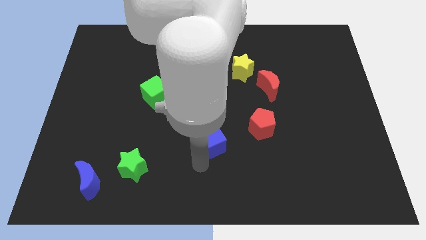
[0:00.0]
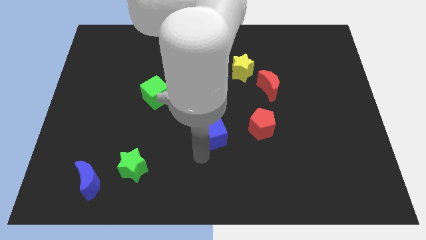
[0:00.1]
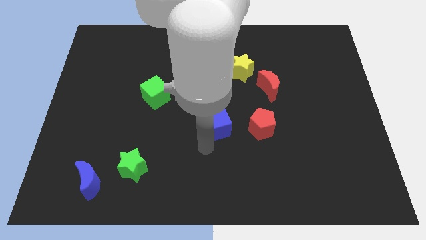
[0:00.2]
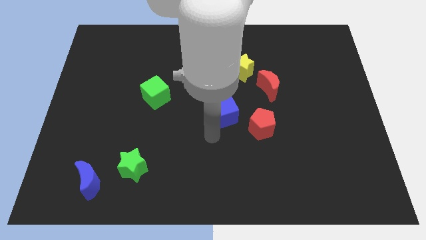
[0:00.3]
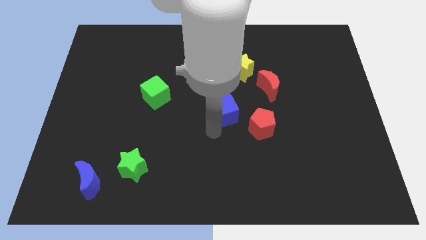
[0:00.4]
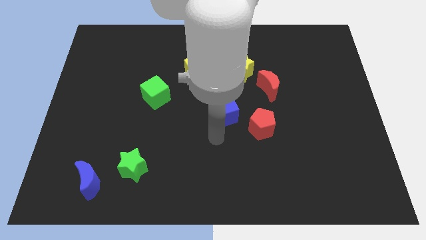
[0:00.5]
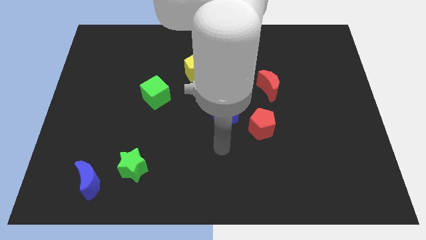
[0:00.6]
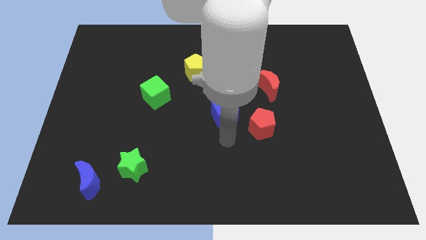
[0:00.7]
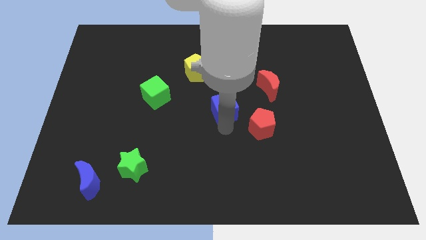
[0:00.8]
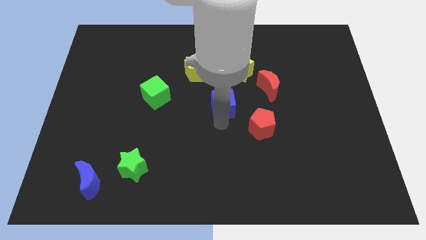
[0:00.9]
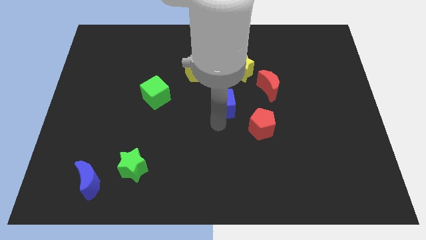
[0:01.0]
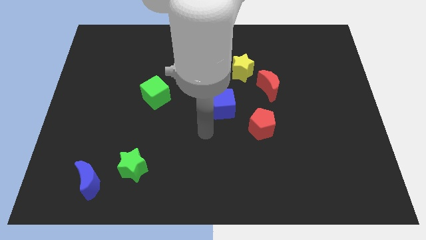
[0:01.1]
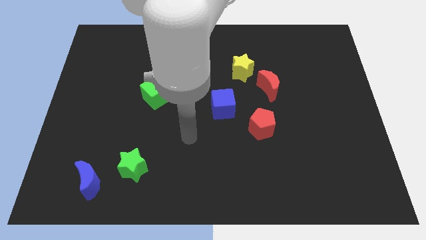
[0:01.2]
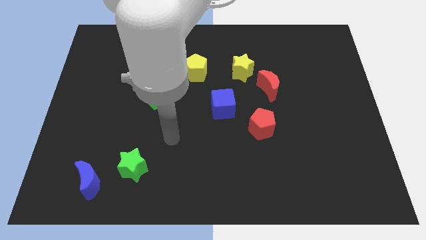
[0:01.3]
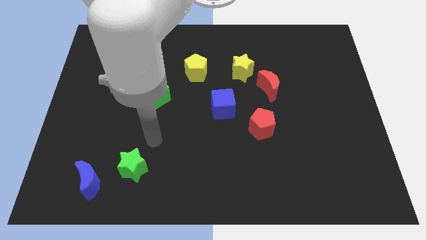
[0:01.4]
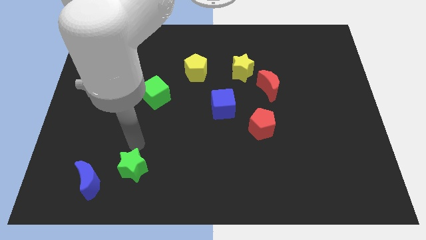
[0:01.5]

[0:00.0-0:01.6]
move the blue cube to the top left side of the red pentagon

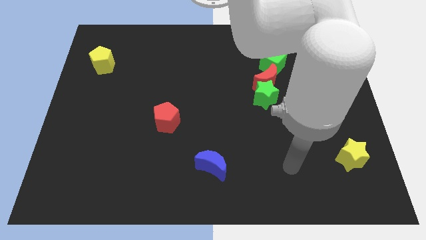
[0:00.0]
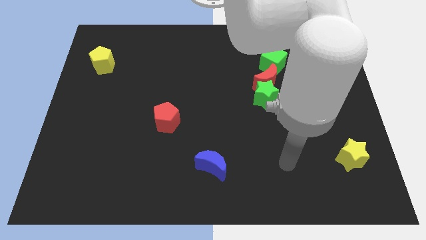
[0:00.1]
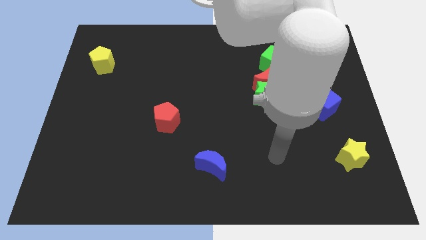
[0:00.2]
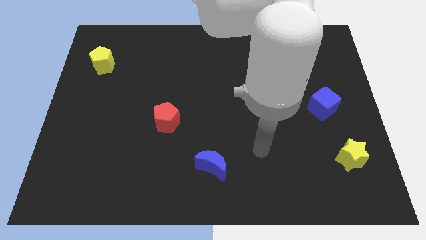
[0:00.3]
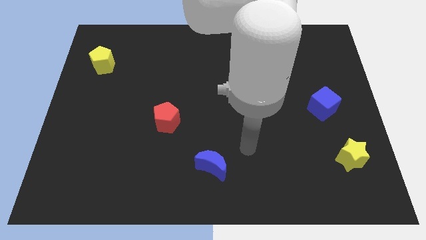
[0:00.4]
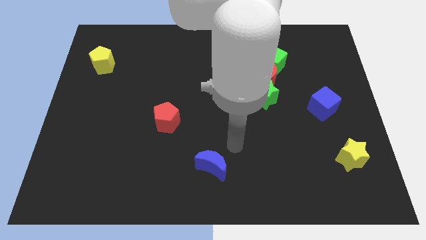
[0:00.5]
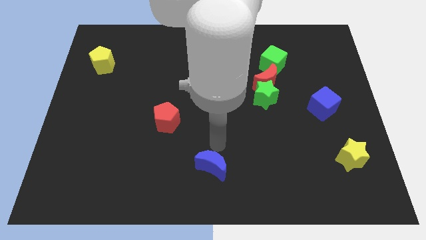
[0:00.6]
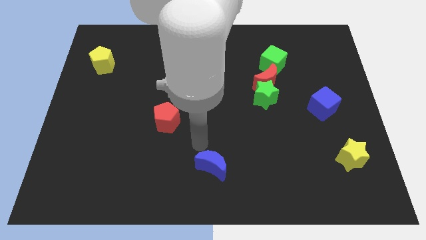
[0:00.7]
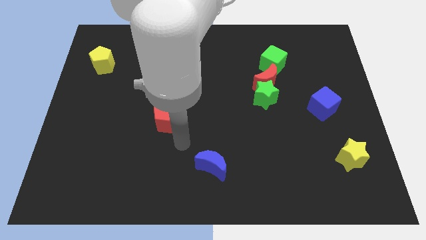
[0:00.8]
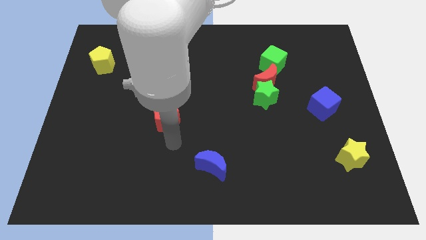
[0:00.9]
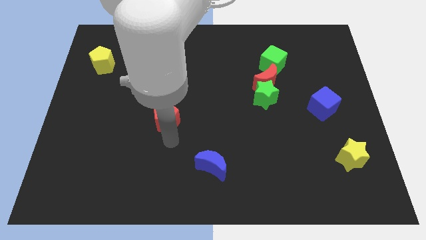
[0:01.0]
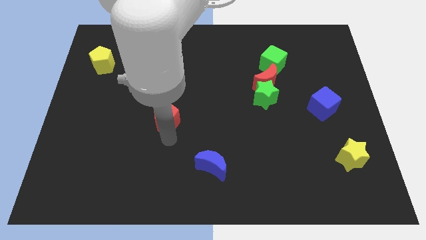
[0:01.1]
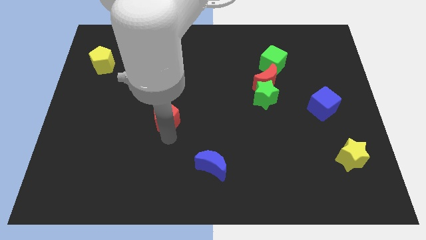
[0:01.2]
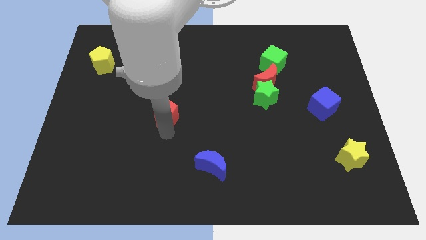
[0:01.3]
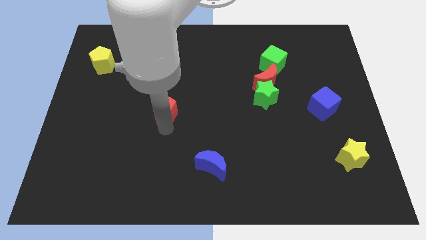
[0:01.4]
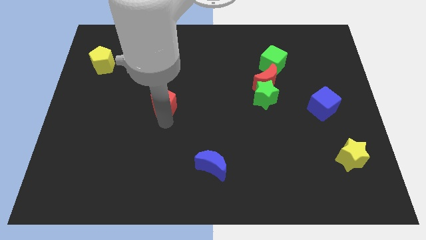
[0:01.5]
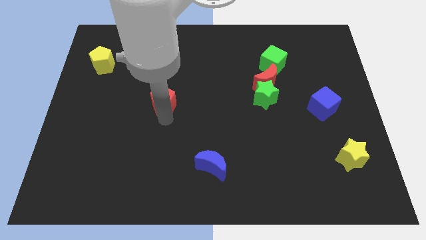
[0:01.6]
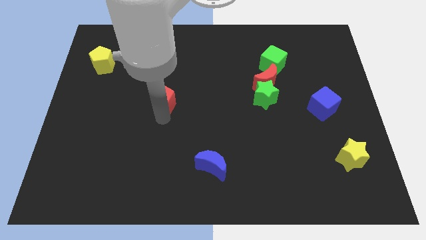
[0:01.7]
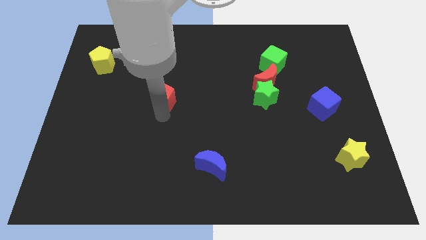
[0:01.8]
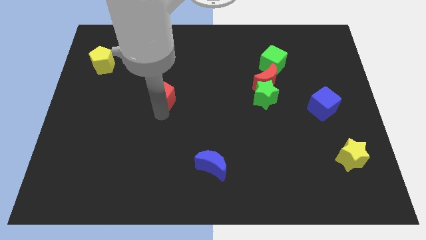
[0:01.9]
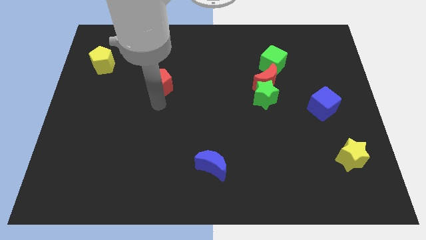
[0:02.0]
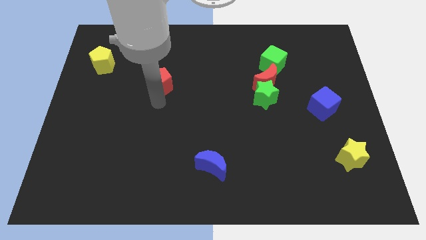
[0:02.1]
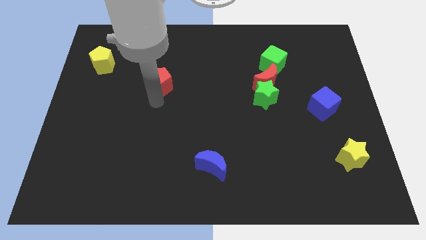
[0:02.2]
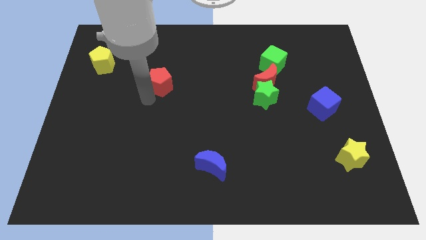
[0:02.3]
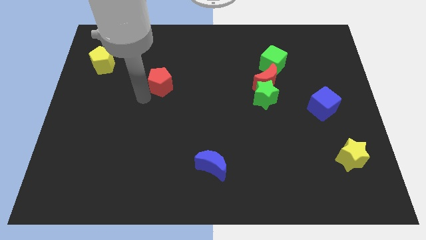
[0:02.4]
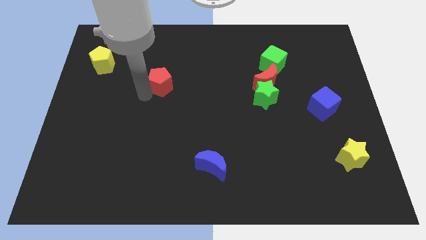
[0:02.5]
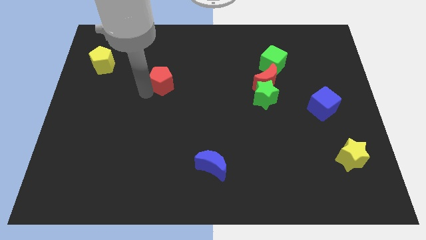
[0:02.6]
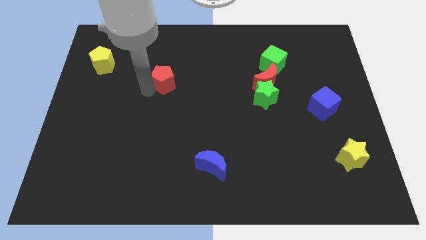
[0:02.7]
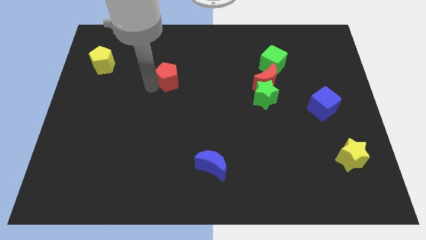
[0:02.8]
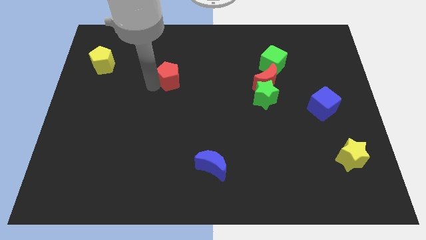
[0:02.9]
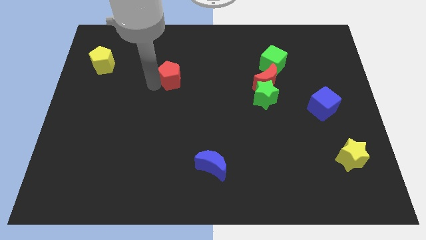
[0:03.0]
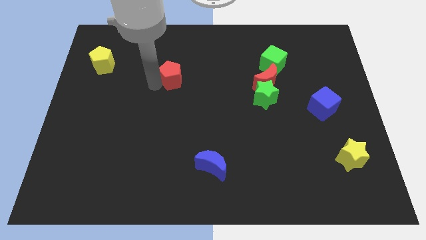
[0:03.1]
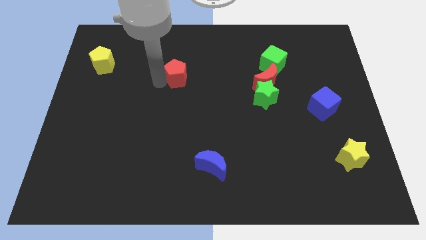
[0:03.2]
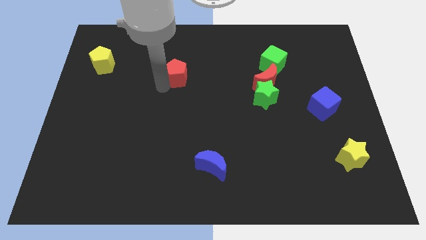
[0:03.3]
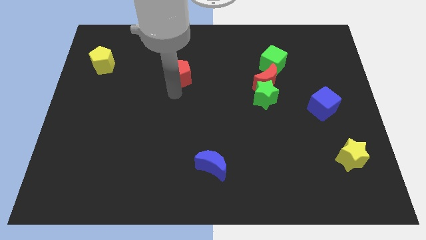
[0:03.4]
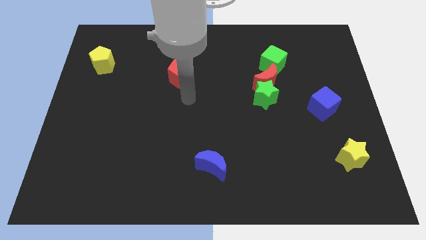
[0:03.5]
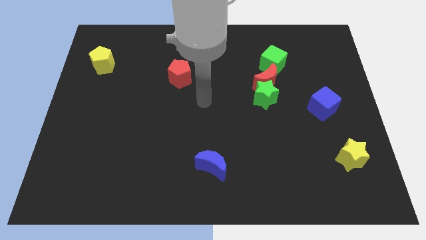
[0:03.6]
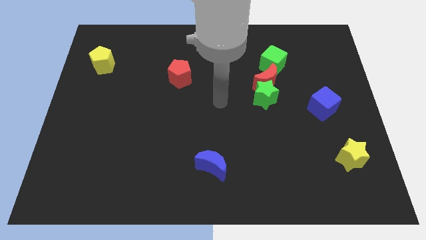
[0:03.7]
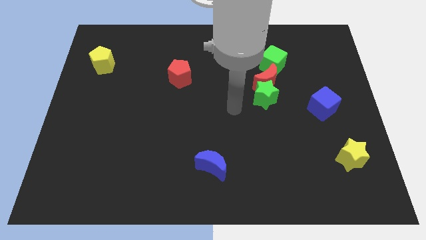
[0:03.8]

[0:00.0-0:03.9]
place the red pentagon diagonally in between the yellow pentagon and the green star

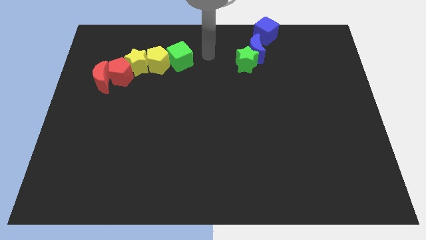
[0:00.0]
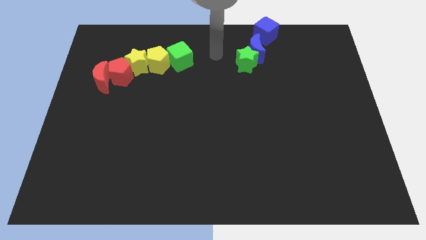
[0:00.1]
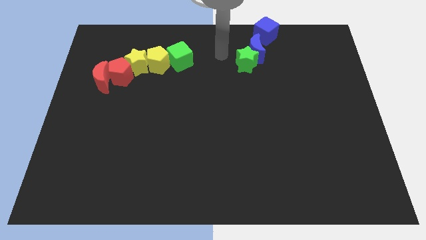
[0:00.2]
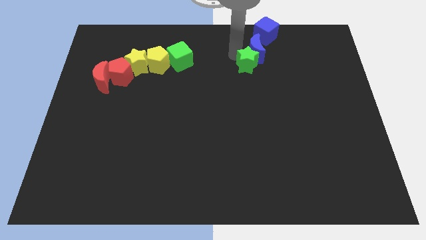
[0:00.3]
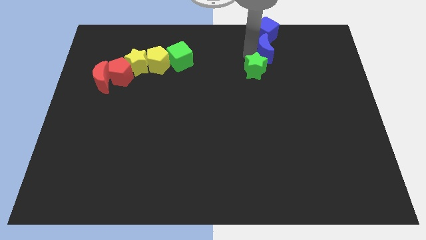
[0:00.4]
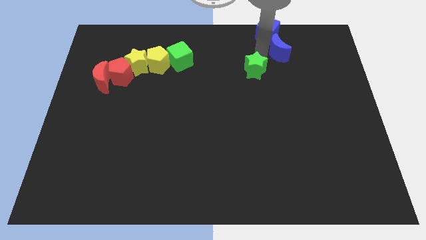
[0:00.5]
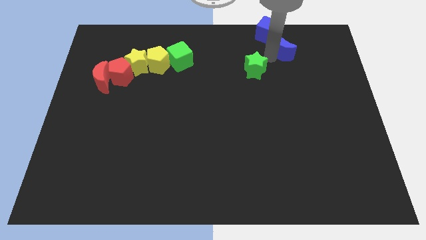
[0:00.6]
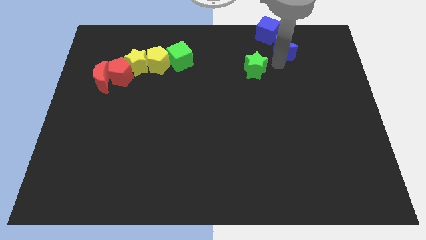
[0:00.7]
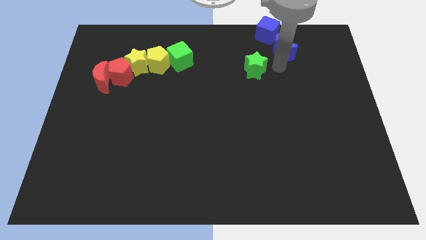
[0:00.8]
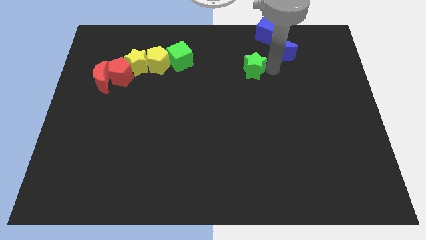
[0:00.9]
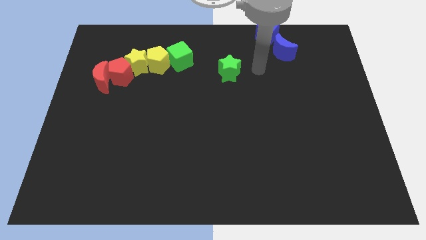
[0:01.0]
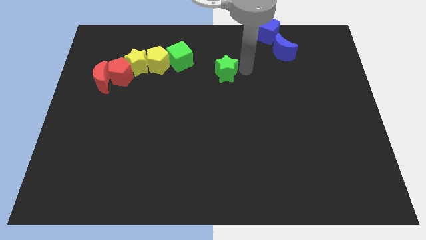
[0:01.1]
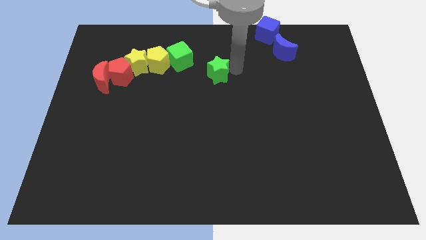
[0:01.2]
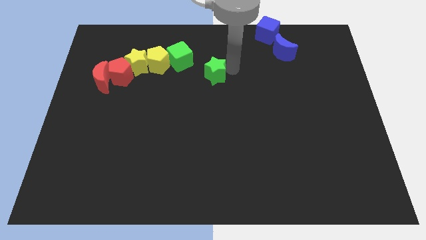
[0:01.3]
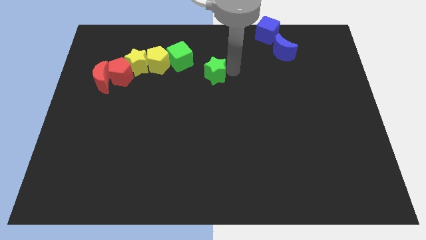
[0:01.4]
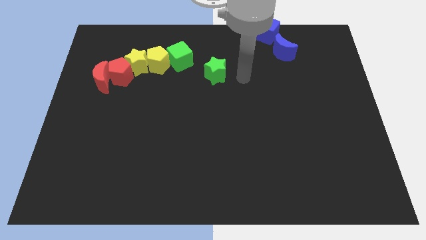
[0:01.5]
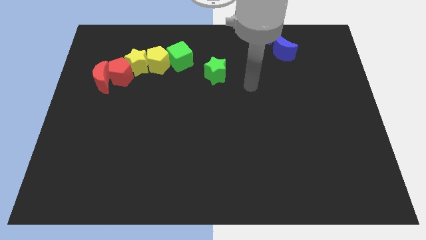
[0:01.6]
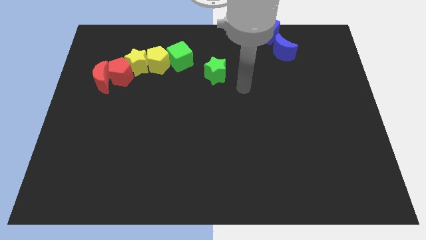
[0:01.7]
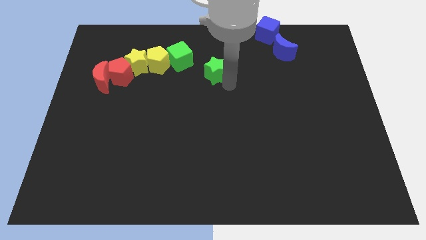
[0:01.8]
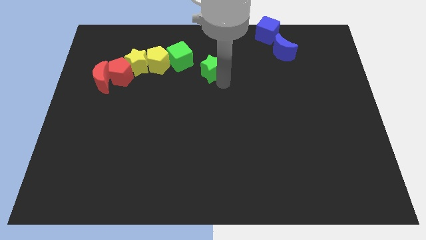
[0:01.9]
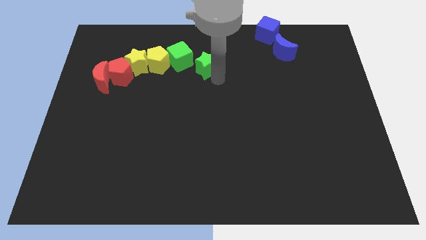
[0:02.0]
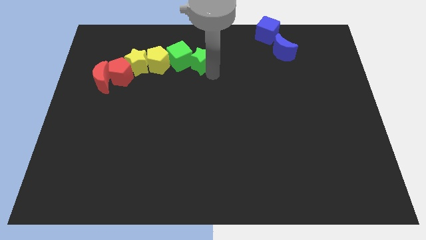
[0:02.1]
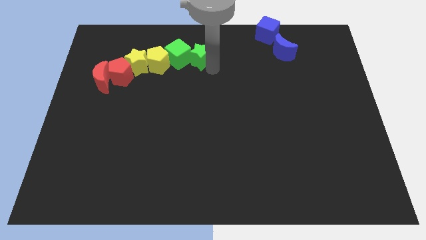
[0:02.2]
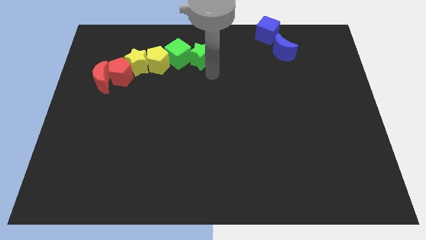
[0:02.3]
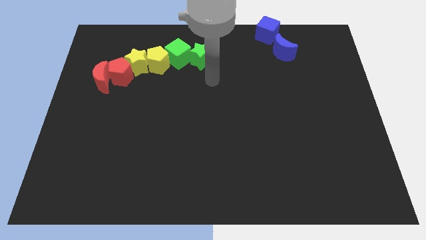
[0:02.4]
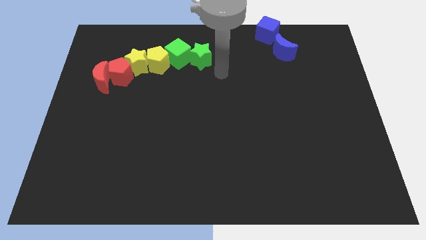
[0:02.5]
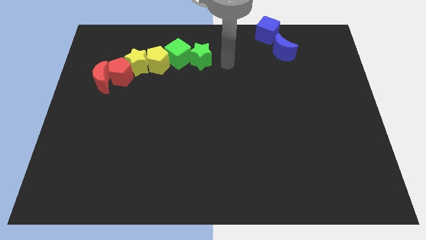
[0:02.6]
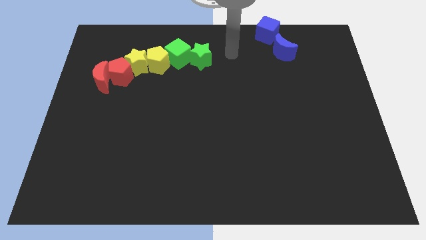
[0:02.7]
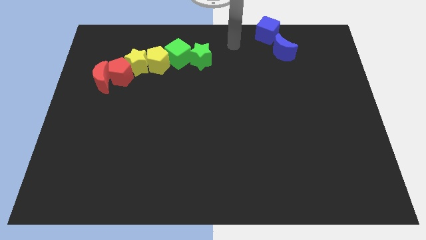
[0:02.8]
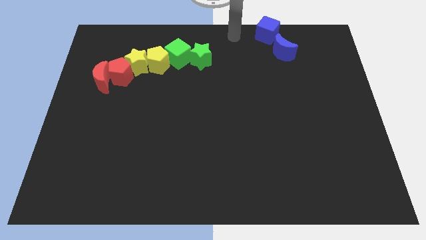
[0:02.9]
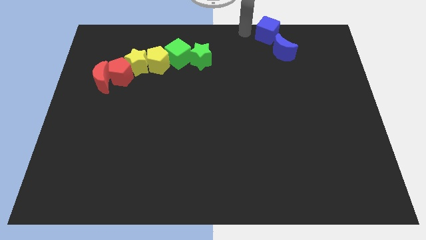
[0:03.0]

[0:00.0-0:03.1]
push the green star into the green cube

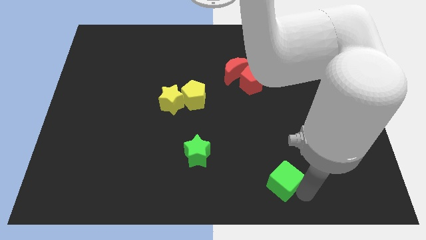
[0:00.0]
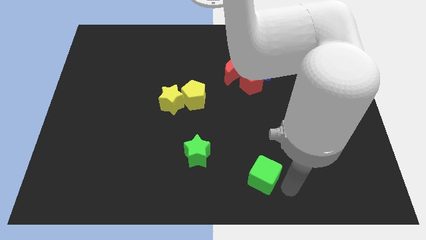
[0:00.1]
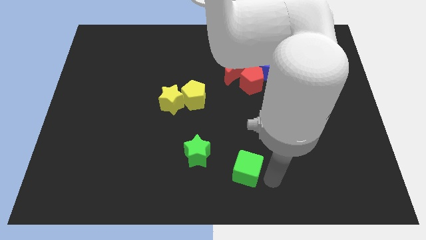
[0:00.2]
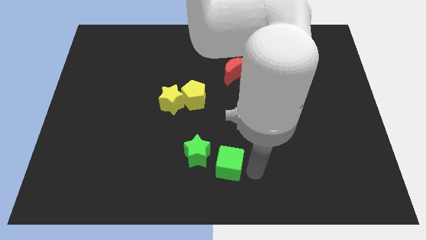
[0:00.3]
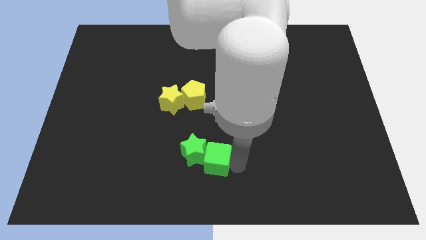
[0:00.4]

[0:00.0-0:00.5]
move the green cube to the right of the green star
